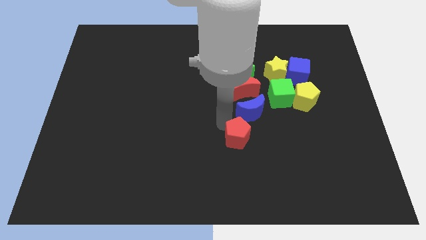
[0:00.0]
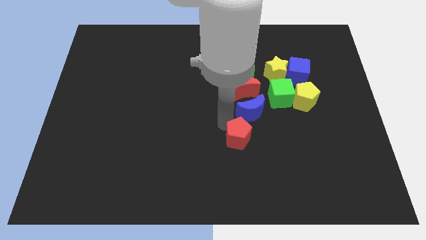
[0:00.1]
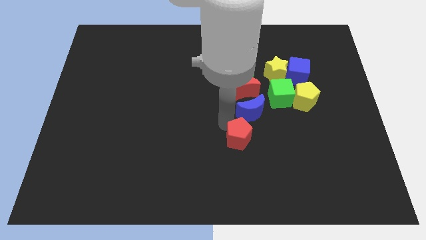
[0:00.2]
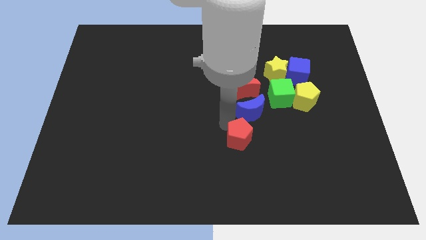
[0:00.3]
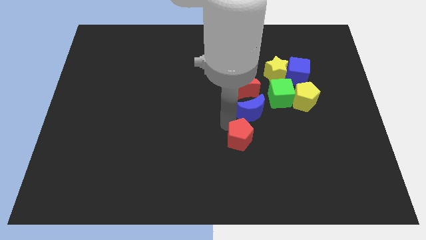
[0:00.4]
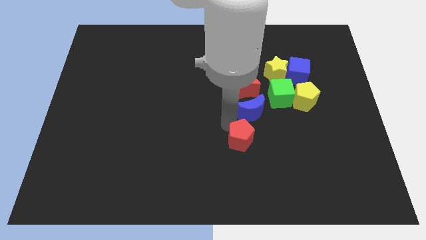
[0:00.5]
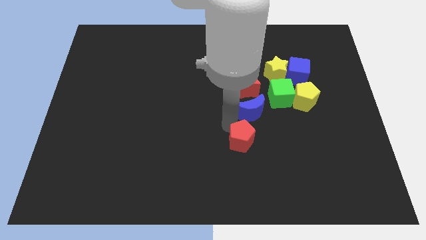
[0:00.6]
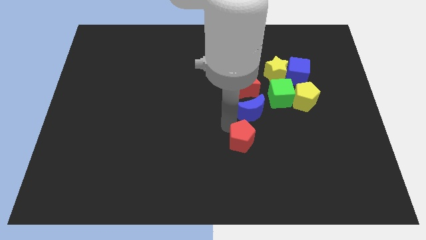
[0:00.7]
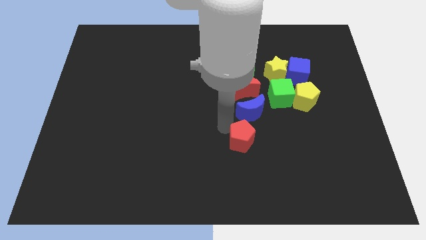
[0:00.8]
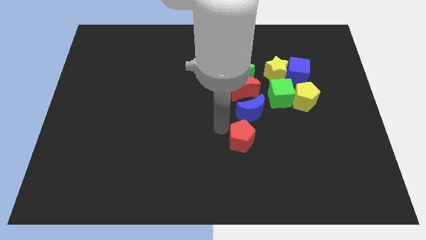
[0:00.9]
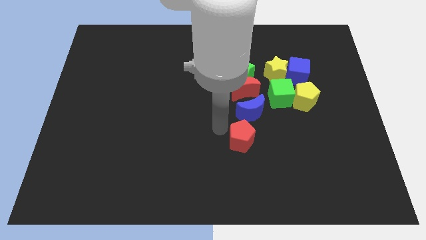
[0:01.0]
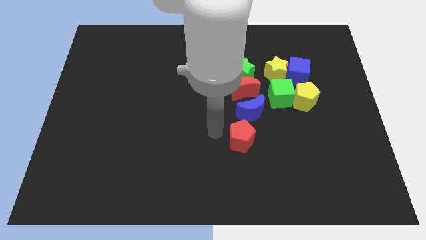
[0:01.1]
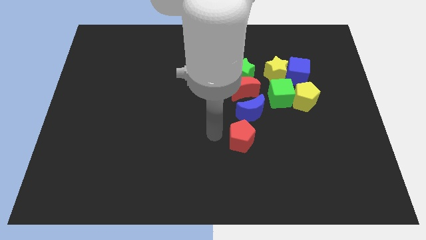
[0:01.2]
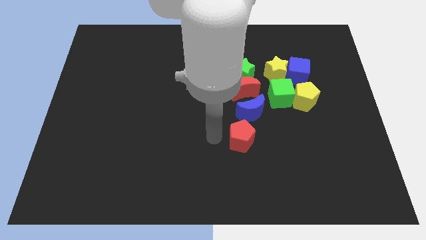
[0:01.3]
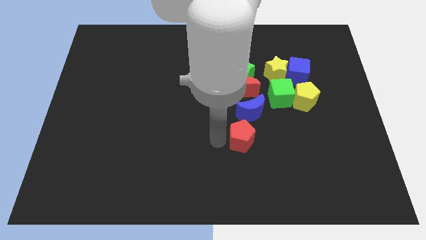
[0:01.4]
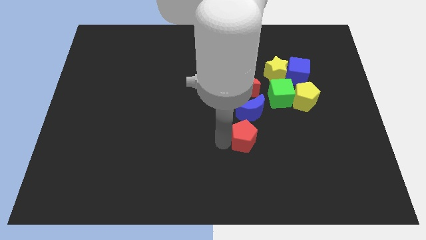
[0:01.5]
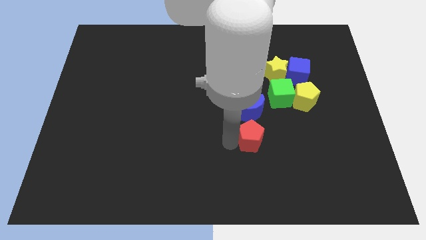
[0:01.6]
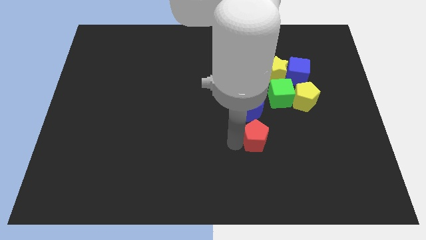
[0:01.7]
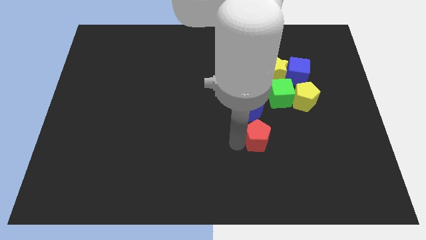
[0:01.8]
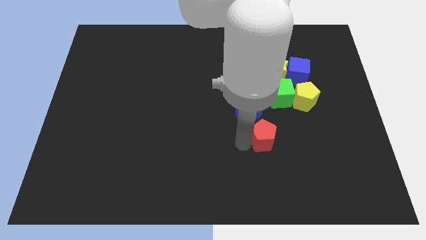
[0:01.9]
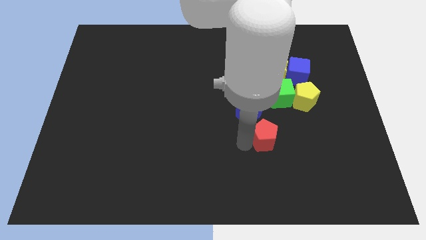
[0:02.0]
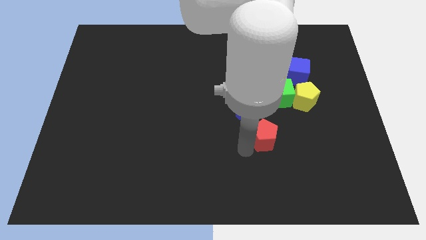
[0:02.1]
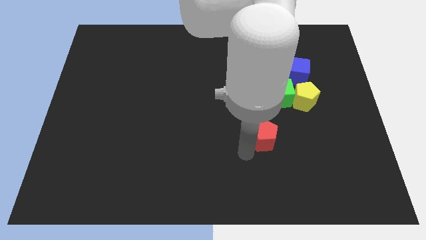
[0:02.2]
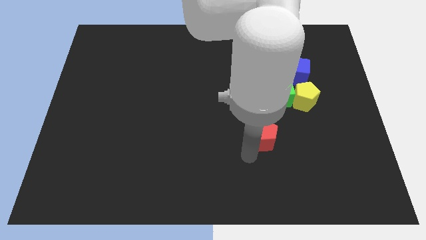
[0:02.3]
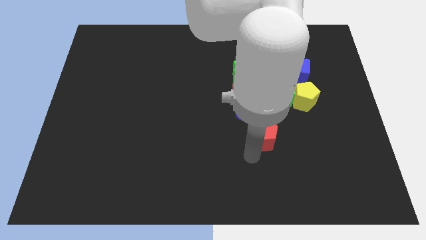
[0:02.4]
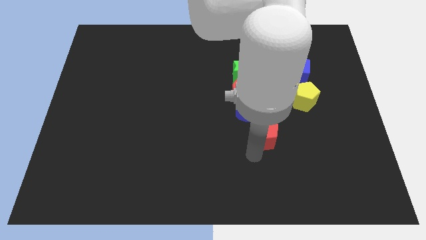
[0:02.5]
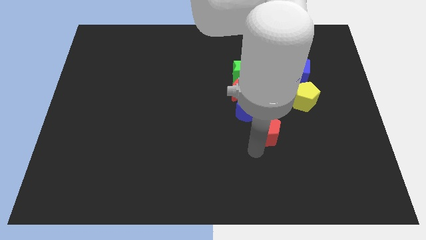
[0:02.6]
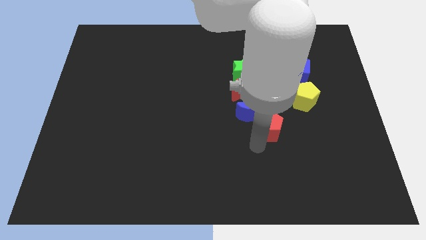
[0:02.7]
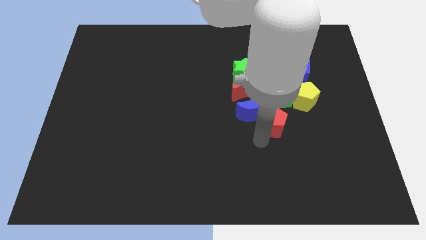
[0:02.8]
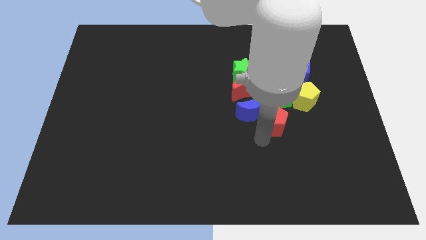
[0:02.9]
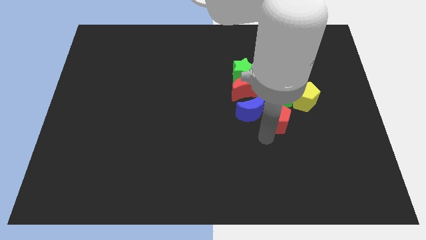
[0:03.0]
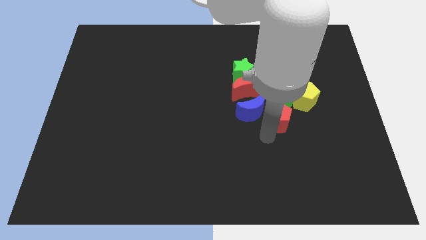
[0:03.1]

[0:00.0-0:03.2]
place the red pentagon below the green cube

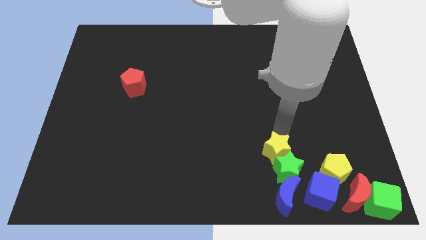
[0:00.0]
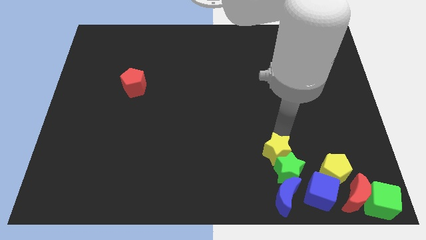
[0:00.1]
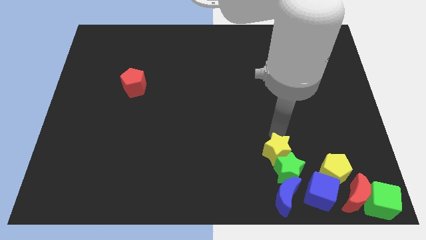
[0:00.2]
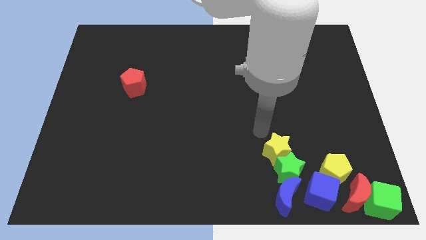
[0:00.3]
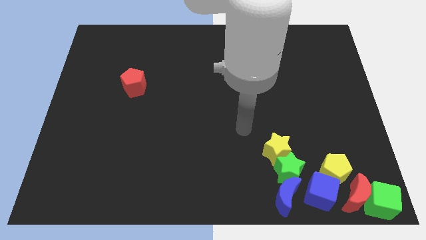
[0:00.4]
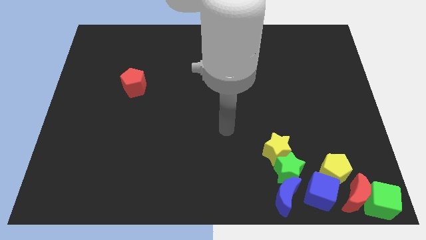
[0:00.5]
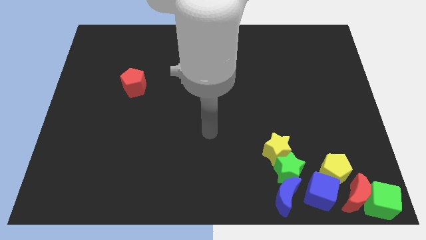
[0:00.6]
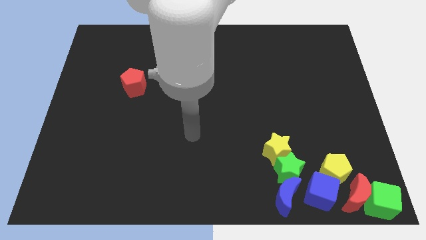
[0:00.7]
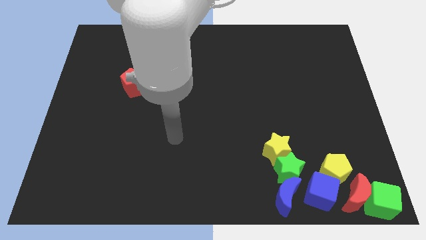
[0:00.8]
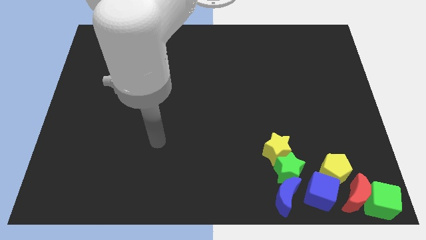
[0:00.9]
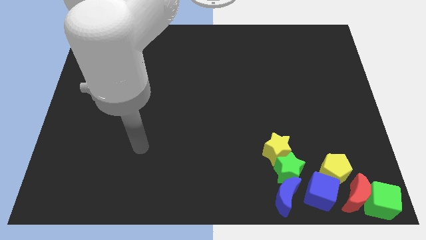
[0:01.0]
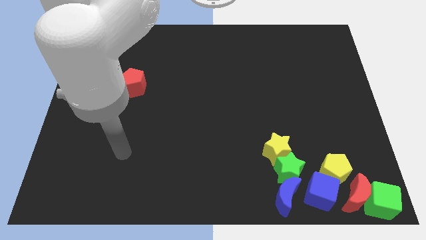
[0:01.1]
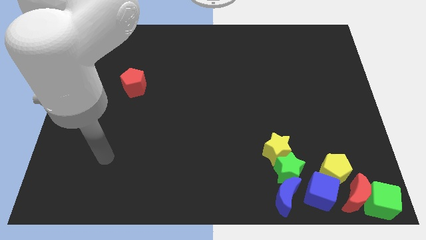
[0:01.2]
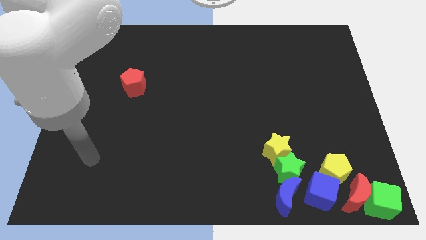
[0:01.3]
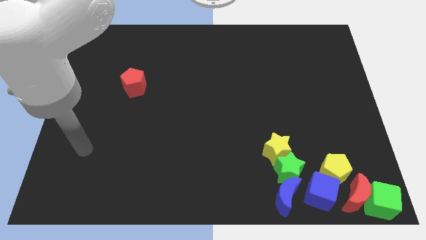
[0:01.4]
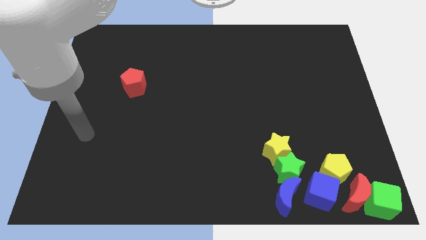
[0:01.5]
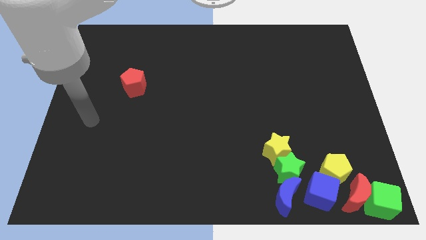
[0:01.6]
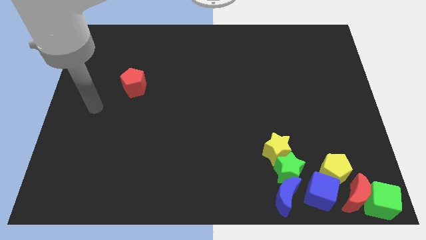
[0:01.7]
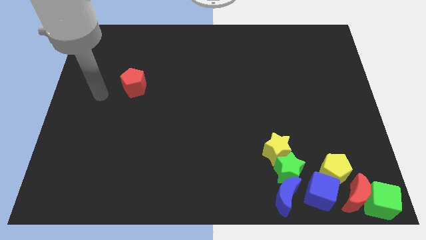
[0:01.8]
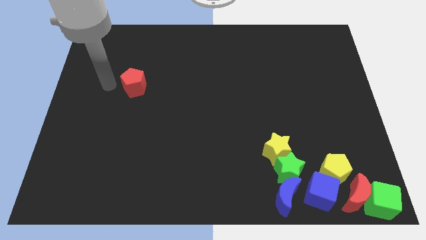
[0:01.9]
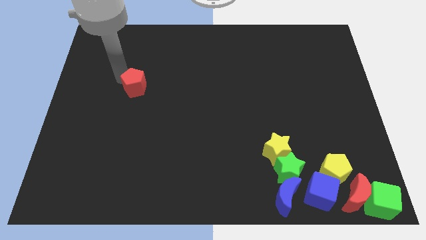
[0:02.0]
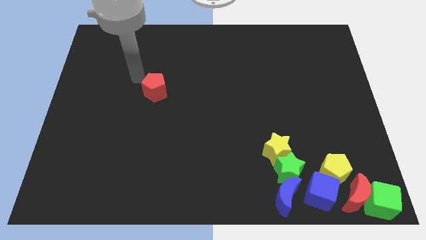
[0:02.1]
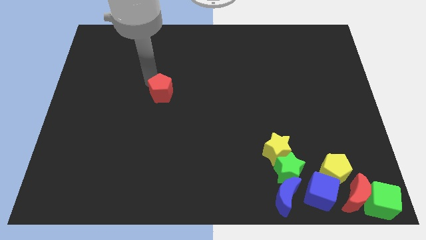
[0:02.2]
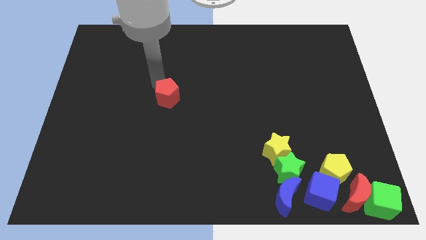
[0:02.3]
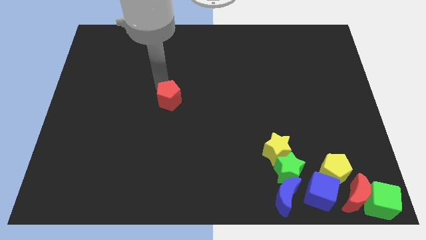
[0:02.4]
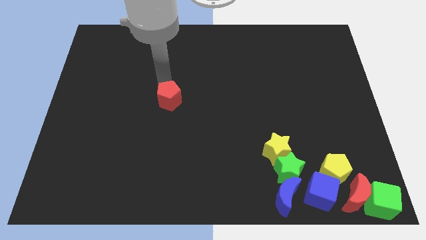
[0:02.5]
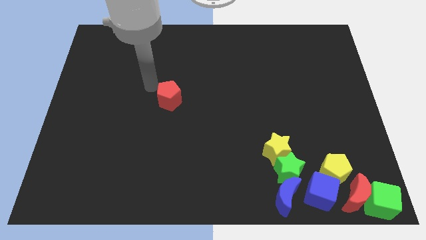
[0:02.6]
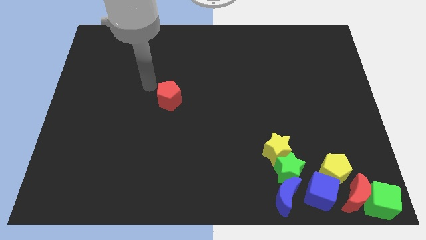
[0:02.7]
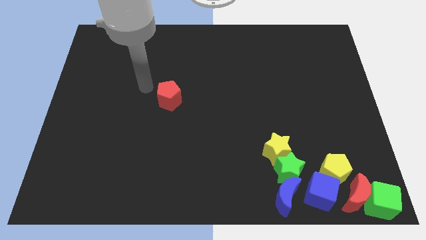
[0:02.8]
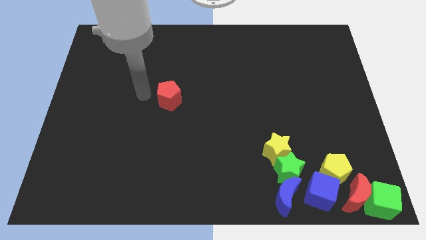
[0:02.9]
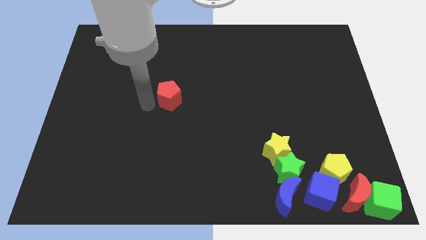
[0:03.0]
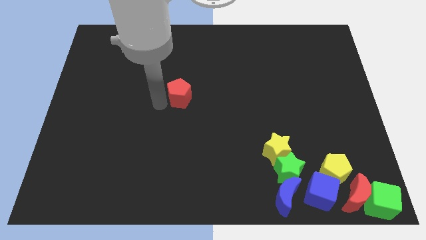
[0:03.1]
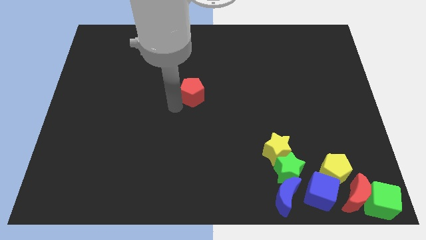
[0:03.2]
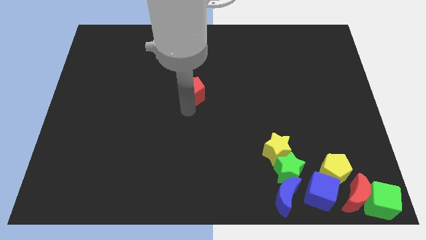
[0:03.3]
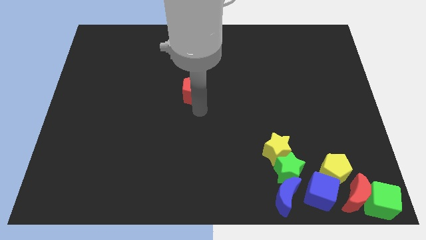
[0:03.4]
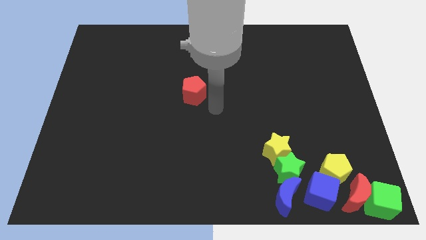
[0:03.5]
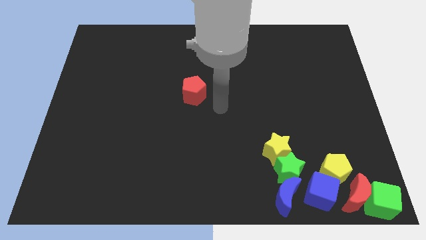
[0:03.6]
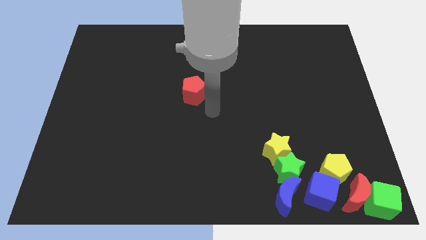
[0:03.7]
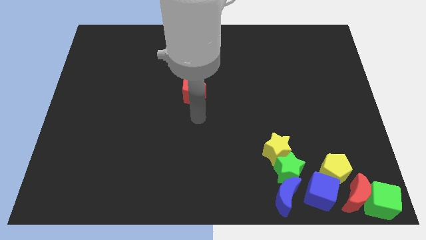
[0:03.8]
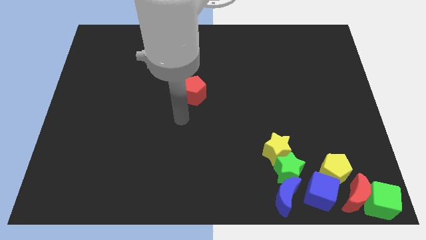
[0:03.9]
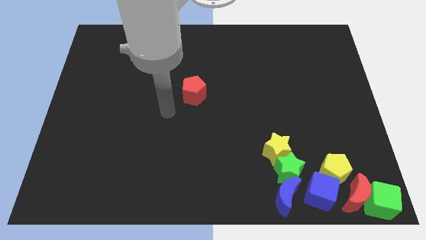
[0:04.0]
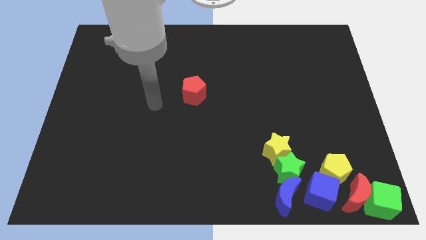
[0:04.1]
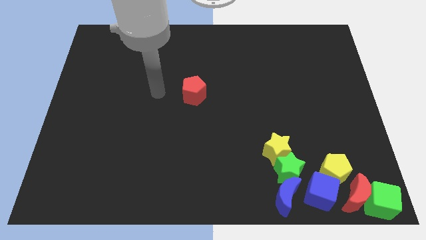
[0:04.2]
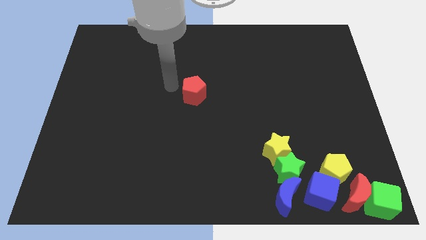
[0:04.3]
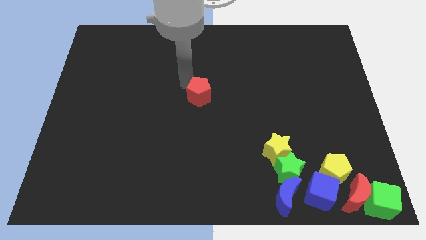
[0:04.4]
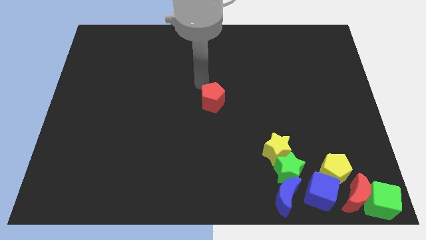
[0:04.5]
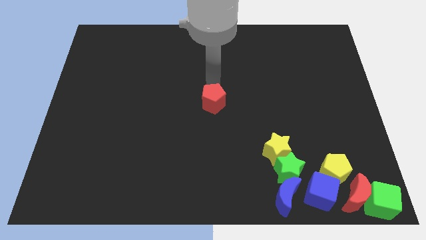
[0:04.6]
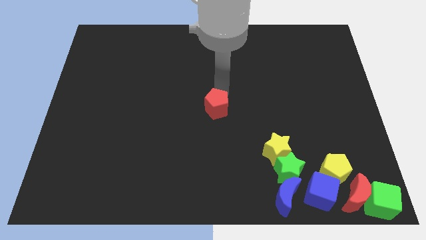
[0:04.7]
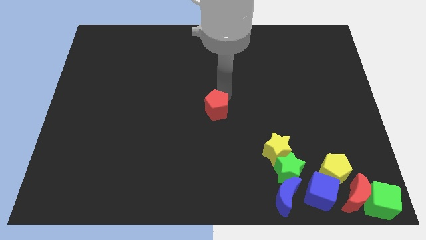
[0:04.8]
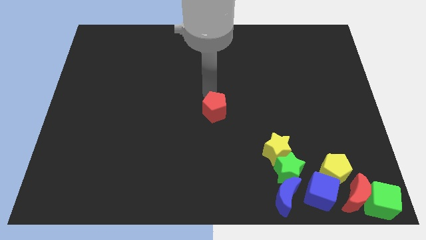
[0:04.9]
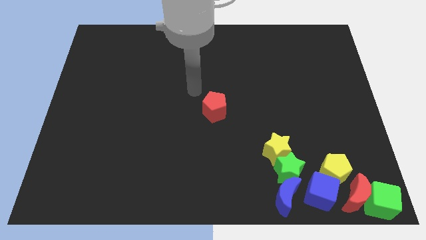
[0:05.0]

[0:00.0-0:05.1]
drag the red pentagon to the center of the board

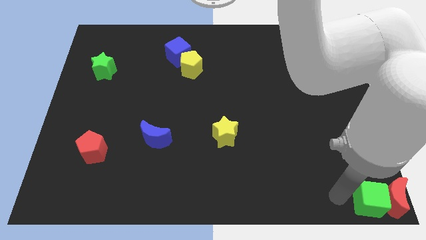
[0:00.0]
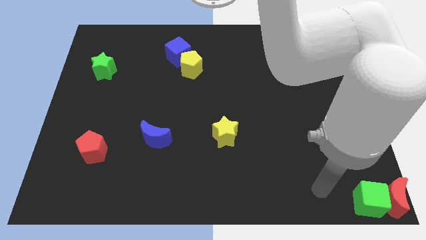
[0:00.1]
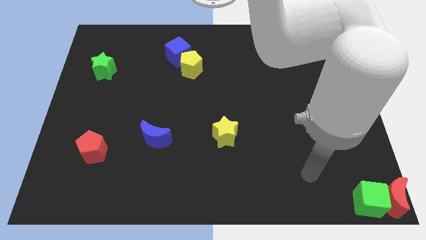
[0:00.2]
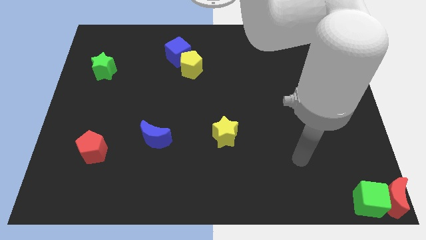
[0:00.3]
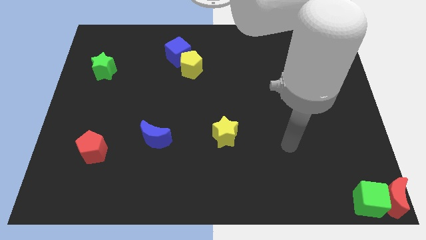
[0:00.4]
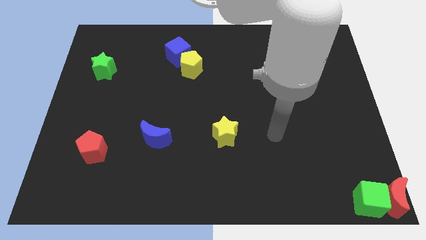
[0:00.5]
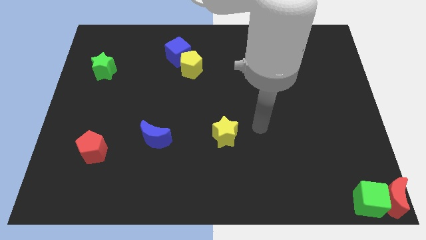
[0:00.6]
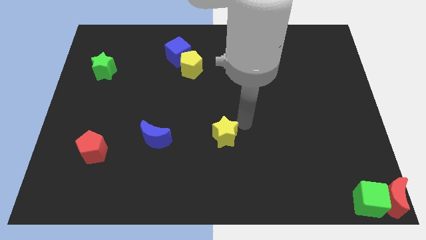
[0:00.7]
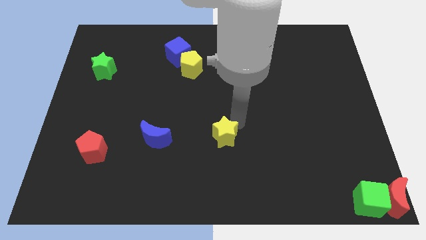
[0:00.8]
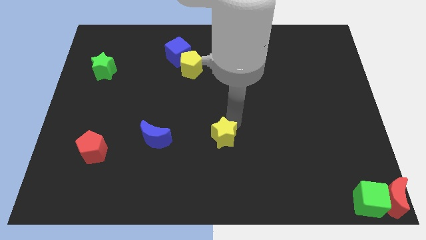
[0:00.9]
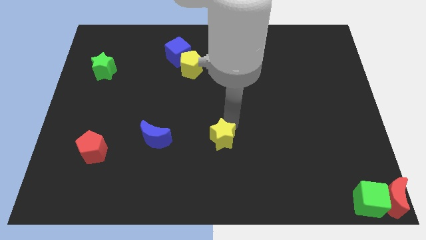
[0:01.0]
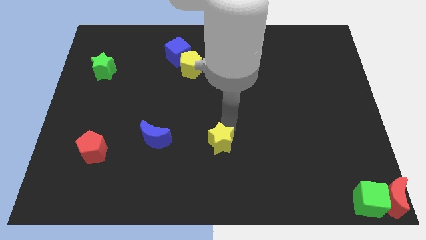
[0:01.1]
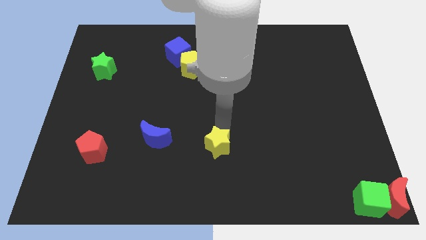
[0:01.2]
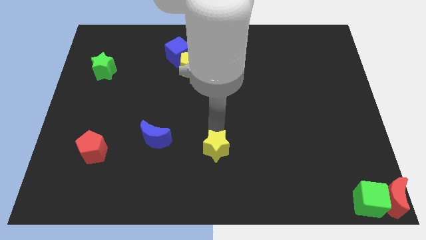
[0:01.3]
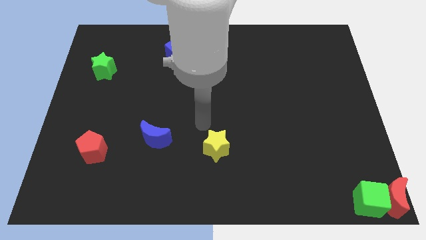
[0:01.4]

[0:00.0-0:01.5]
move the yellow star slightly to the bottom side of the board
